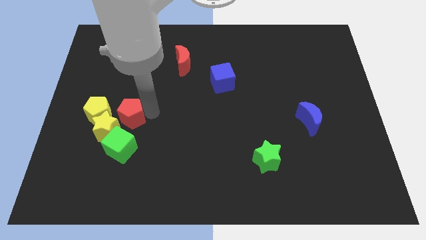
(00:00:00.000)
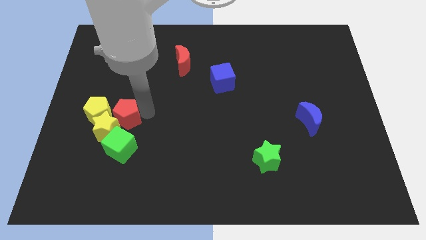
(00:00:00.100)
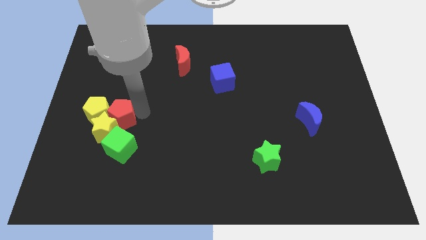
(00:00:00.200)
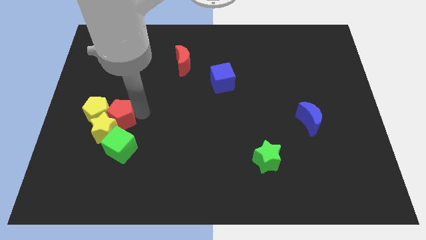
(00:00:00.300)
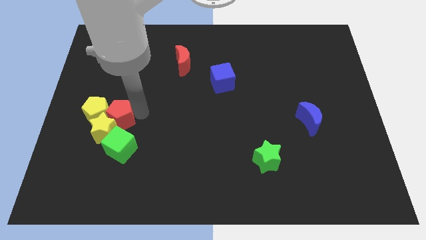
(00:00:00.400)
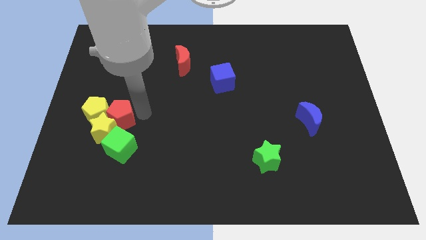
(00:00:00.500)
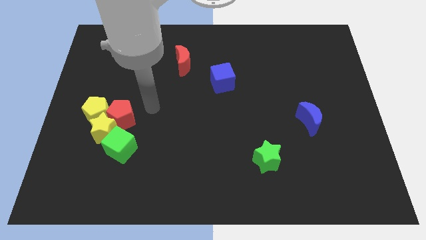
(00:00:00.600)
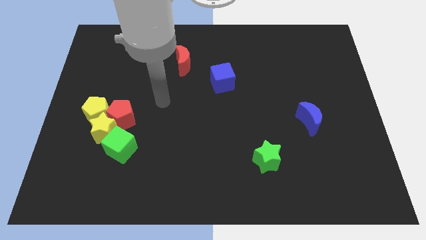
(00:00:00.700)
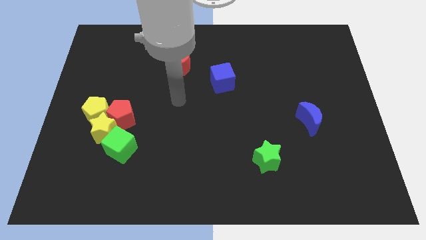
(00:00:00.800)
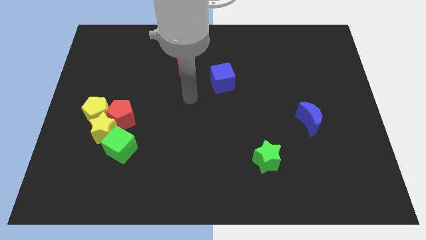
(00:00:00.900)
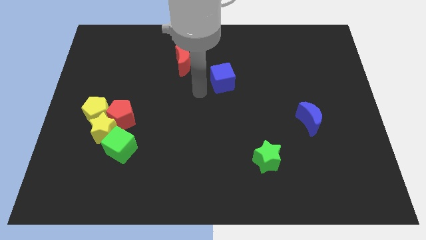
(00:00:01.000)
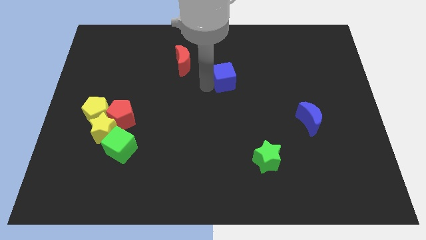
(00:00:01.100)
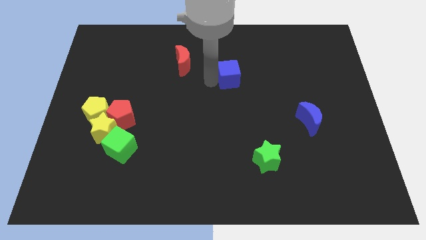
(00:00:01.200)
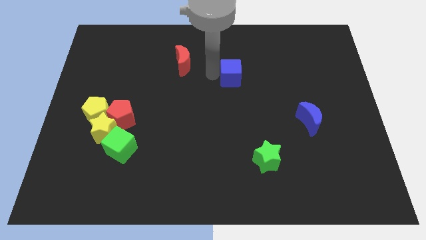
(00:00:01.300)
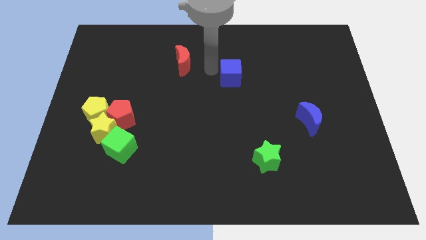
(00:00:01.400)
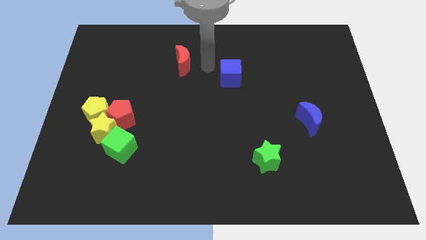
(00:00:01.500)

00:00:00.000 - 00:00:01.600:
push the red pentagon towards the yellow pentagon

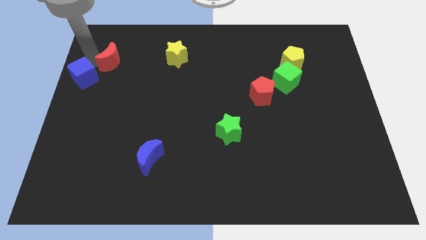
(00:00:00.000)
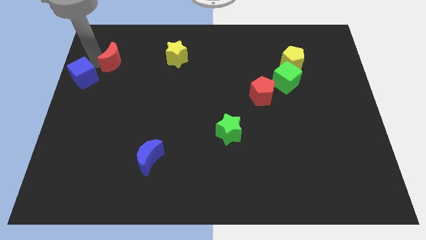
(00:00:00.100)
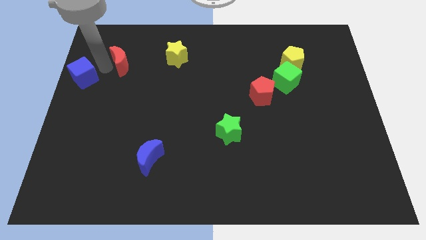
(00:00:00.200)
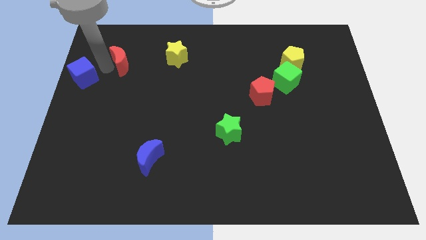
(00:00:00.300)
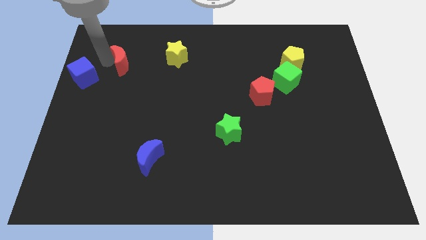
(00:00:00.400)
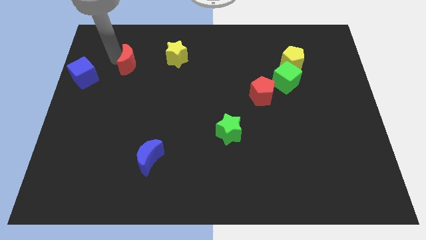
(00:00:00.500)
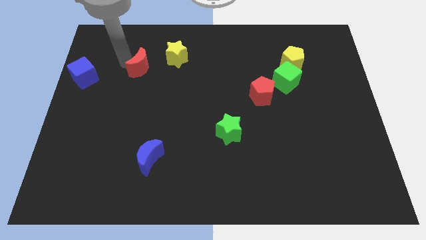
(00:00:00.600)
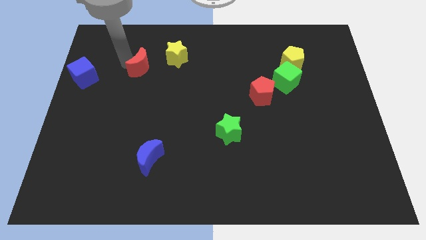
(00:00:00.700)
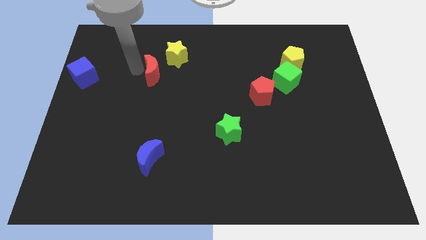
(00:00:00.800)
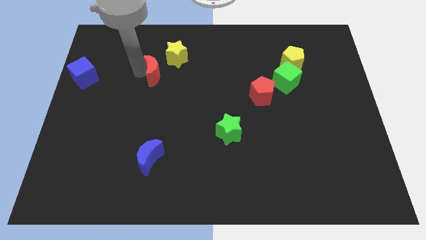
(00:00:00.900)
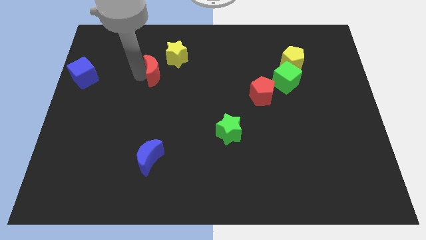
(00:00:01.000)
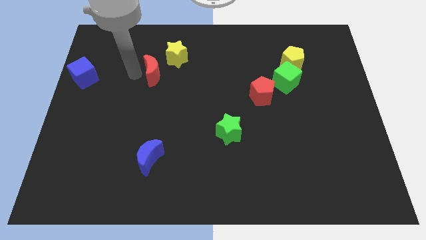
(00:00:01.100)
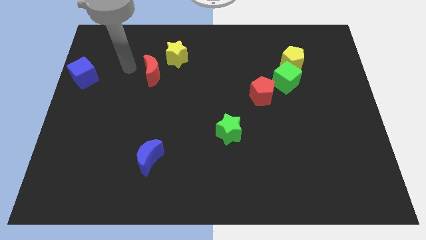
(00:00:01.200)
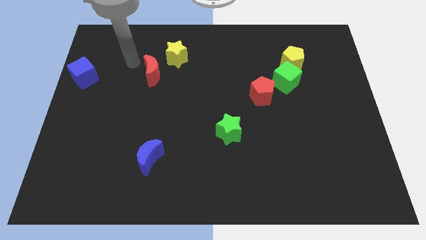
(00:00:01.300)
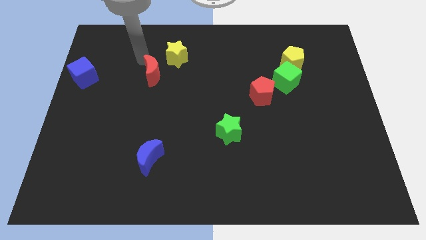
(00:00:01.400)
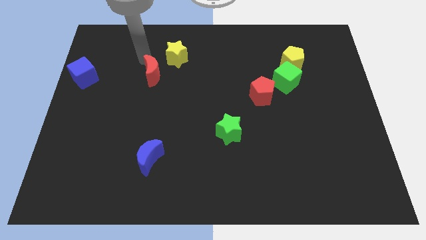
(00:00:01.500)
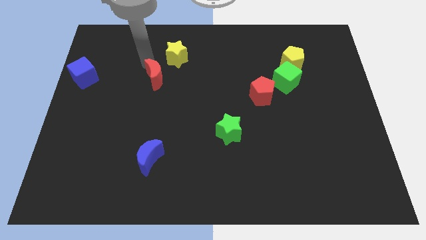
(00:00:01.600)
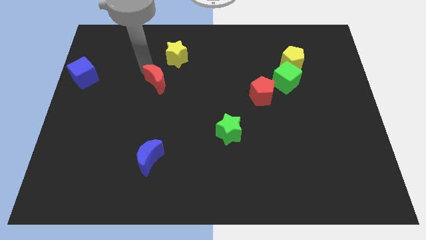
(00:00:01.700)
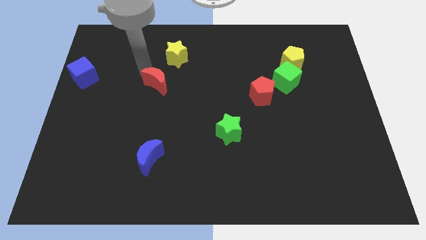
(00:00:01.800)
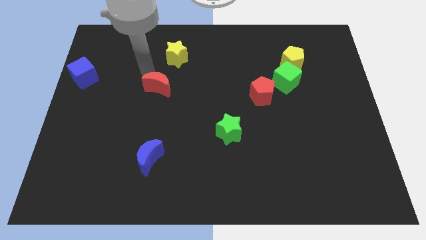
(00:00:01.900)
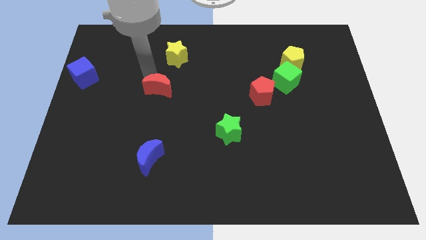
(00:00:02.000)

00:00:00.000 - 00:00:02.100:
place red moon horizontal left to red pentagon

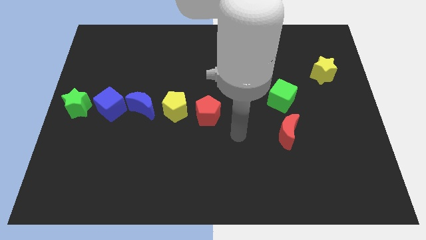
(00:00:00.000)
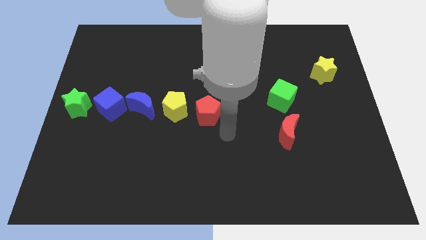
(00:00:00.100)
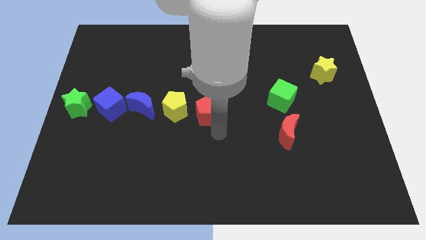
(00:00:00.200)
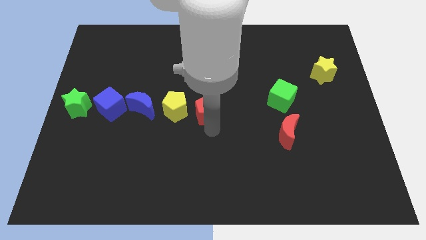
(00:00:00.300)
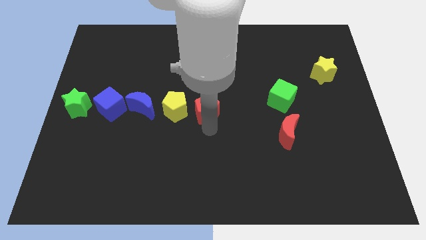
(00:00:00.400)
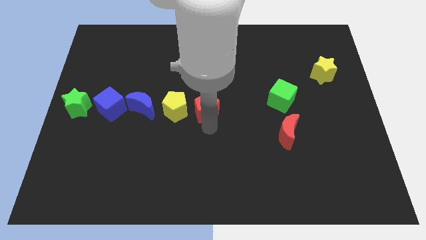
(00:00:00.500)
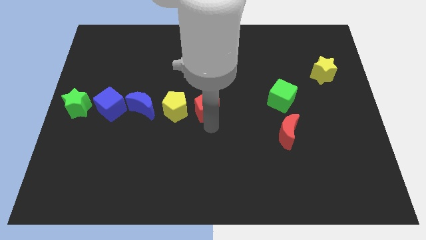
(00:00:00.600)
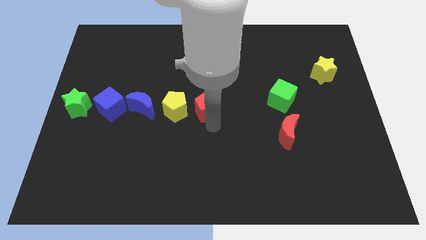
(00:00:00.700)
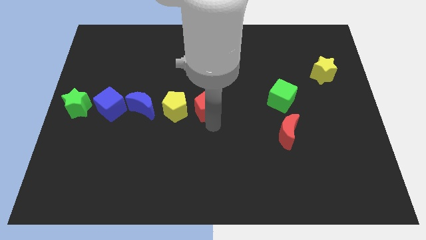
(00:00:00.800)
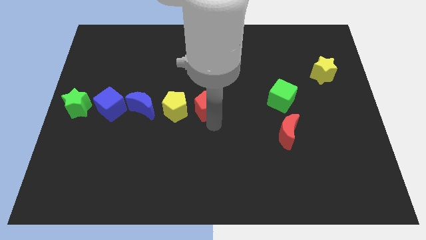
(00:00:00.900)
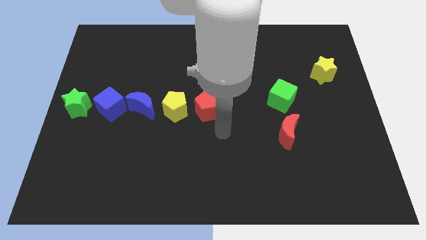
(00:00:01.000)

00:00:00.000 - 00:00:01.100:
push the red pentagon slightly to the top

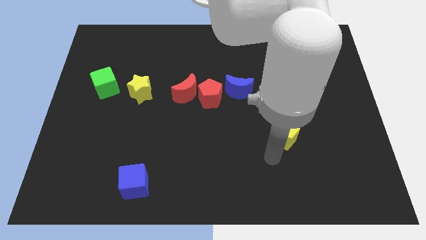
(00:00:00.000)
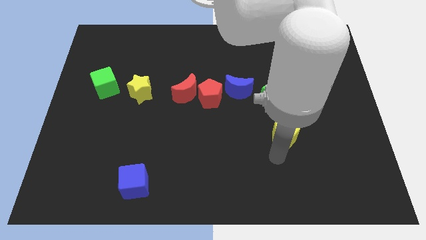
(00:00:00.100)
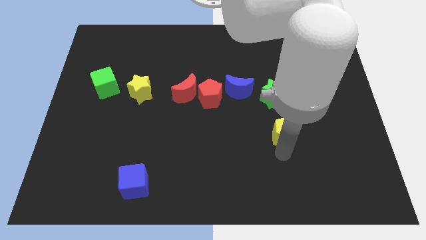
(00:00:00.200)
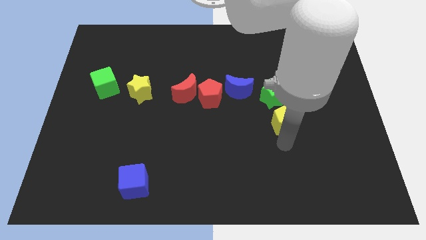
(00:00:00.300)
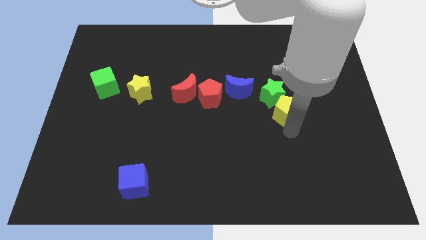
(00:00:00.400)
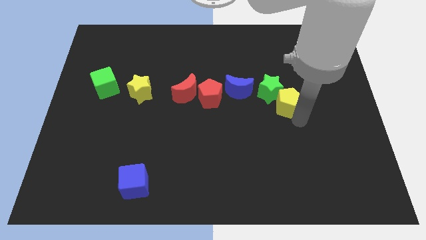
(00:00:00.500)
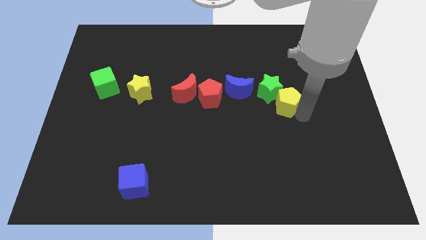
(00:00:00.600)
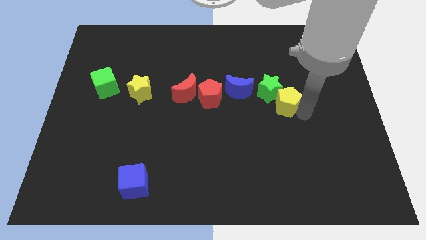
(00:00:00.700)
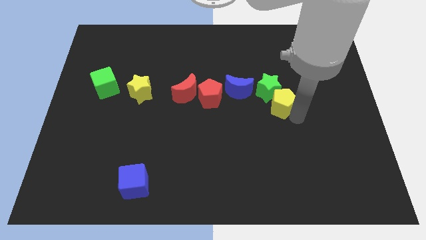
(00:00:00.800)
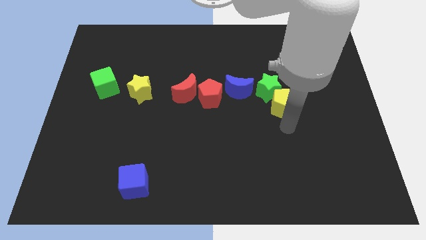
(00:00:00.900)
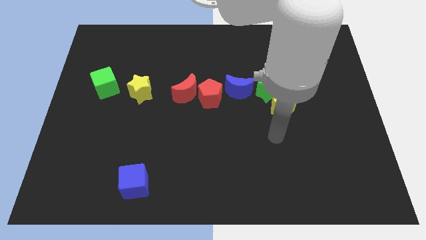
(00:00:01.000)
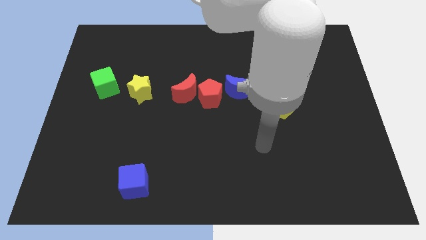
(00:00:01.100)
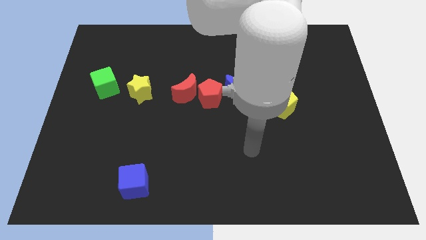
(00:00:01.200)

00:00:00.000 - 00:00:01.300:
push the yellow pentagon into the green star

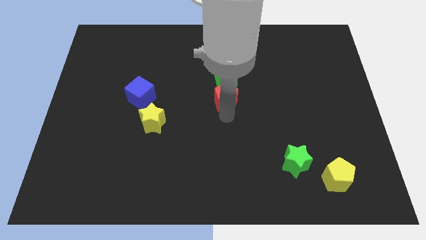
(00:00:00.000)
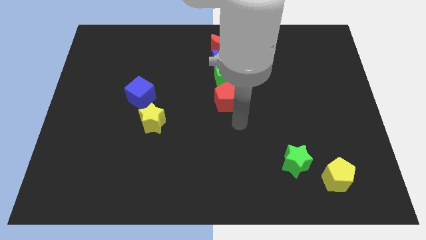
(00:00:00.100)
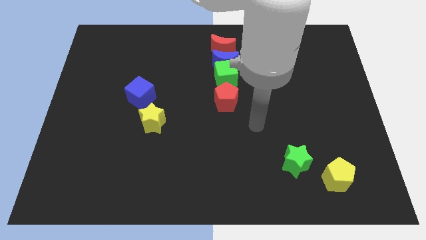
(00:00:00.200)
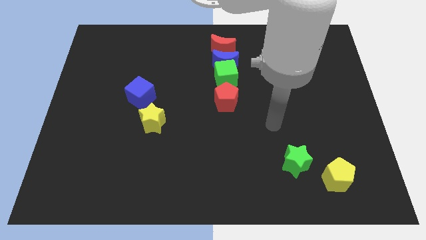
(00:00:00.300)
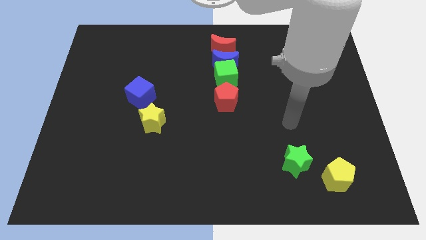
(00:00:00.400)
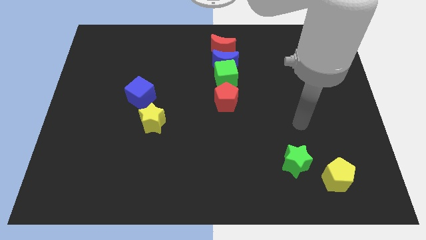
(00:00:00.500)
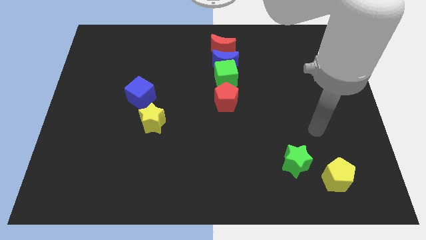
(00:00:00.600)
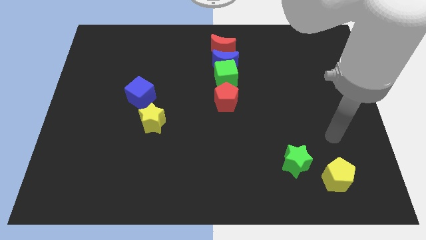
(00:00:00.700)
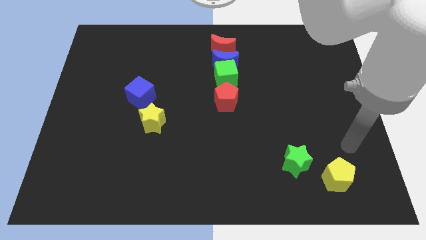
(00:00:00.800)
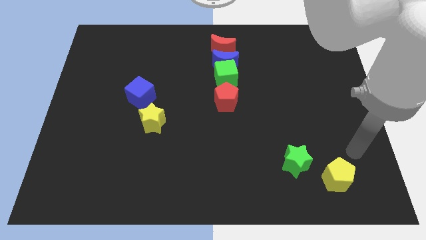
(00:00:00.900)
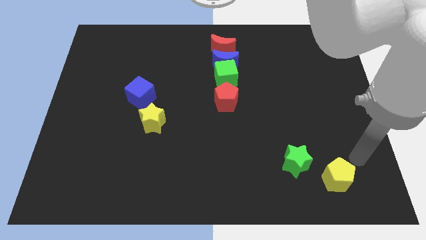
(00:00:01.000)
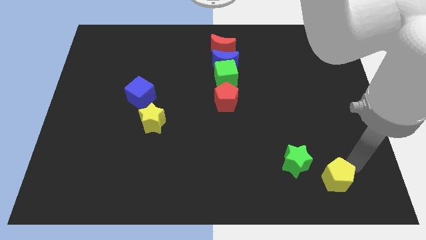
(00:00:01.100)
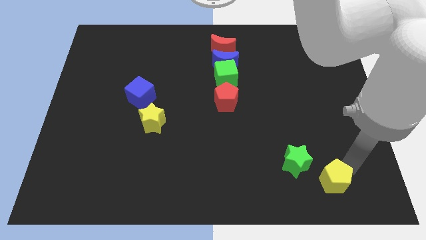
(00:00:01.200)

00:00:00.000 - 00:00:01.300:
push your arm at the top right corner of the yellow pentagon

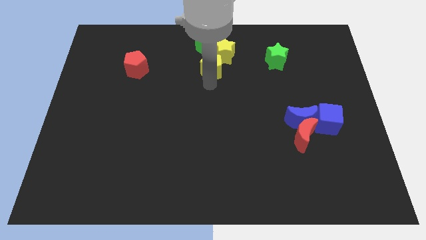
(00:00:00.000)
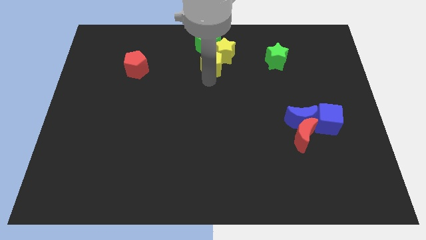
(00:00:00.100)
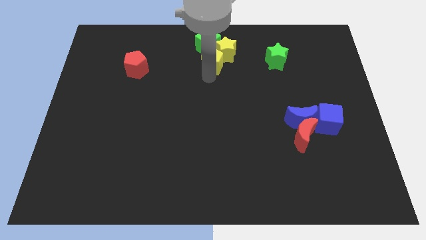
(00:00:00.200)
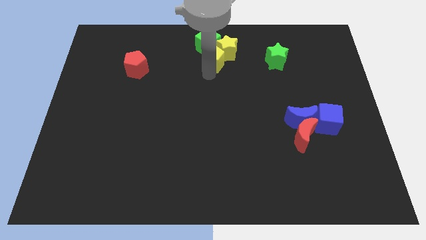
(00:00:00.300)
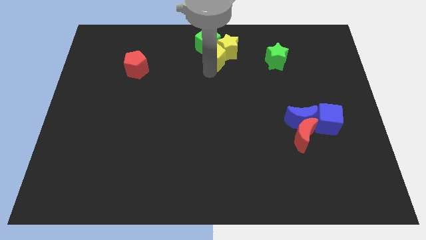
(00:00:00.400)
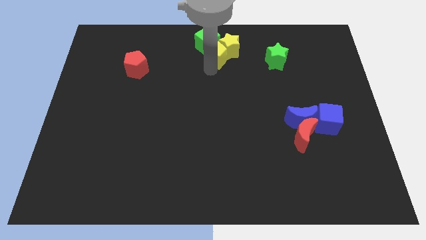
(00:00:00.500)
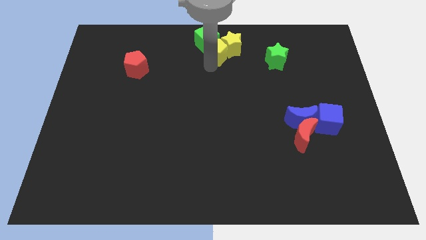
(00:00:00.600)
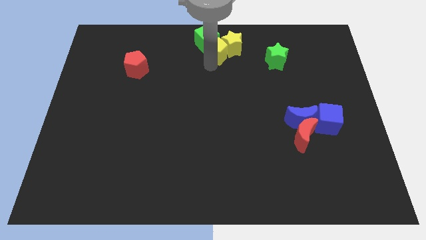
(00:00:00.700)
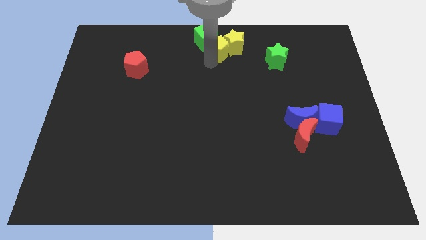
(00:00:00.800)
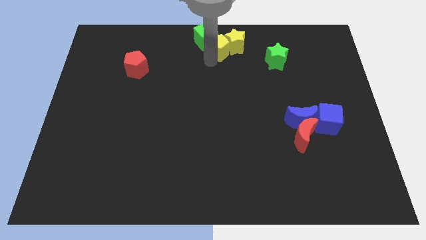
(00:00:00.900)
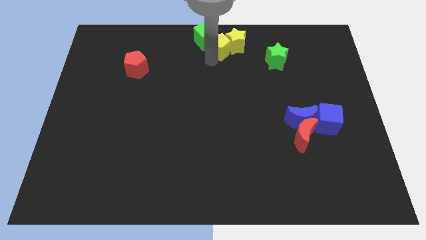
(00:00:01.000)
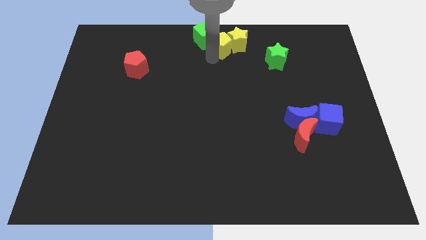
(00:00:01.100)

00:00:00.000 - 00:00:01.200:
slide the yellow blocks upwards at the top side of the board

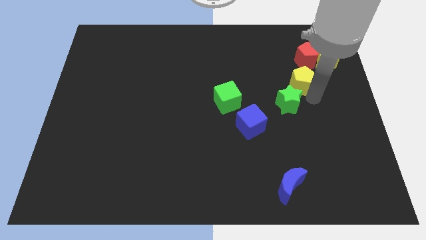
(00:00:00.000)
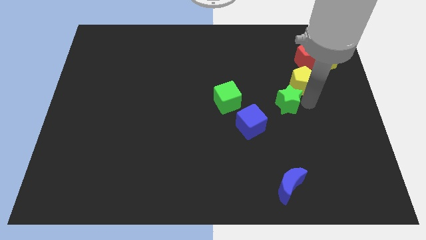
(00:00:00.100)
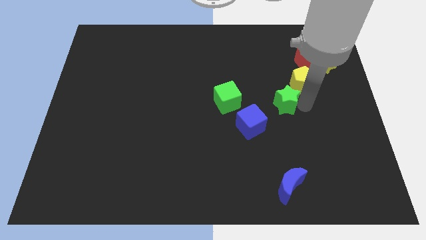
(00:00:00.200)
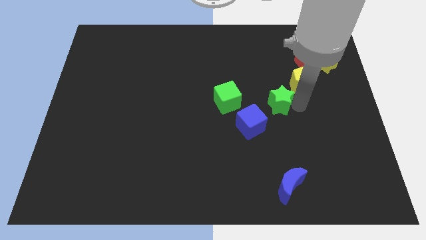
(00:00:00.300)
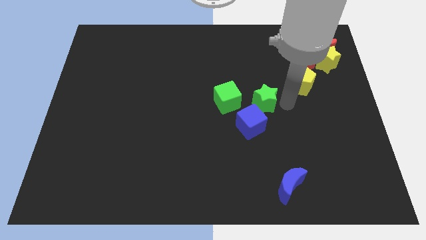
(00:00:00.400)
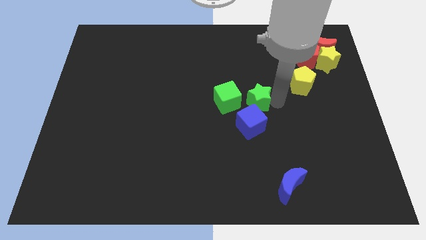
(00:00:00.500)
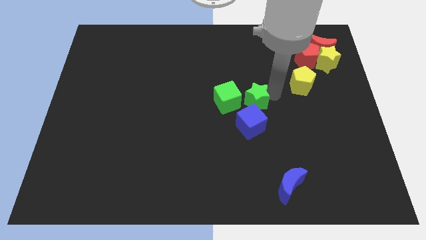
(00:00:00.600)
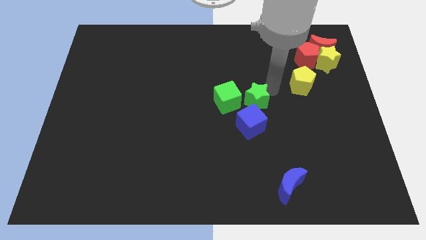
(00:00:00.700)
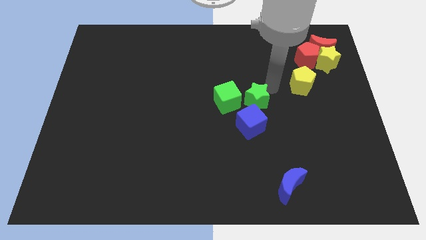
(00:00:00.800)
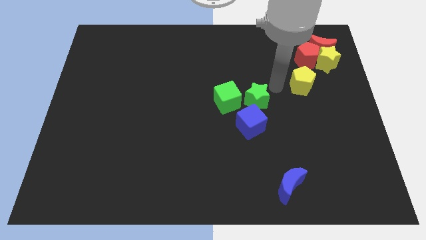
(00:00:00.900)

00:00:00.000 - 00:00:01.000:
move the green star to the right of the green cube
